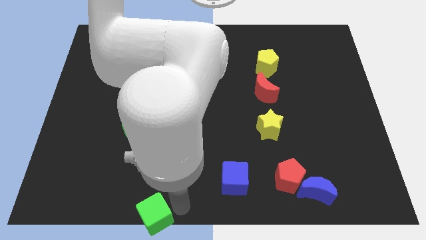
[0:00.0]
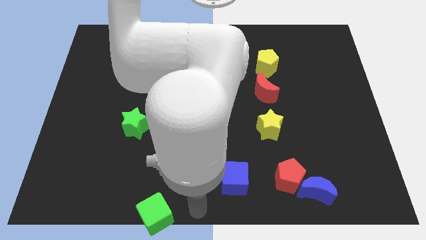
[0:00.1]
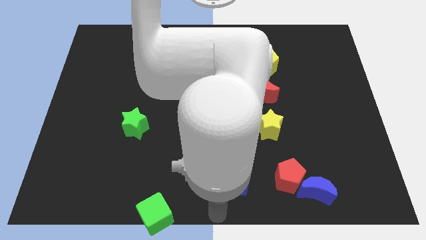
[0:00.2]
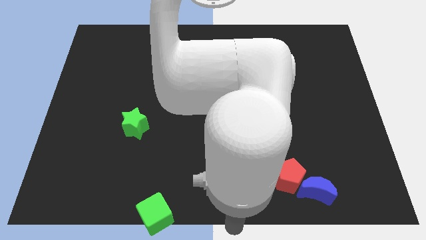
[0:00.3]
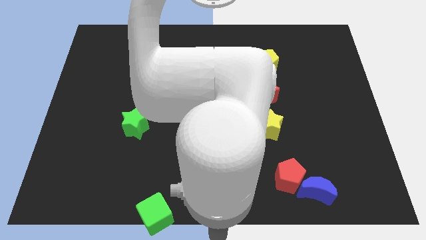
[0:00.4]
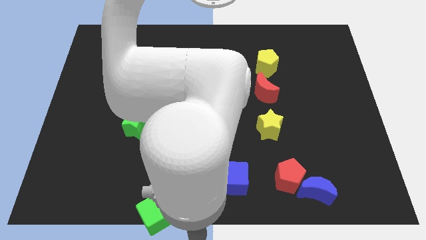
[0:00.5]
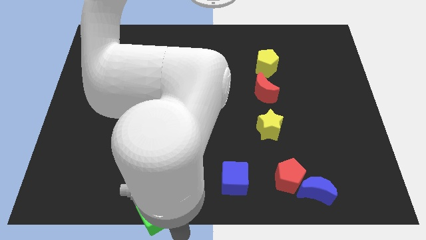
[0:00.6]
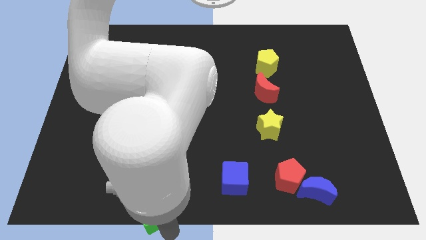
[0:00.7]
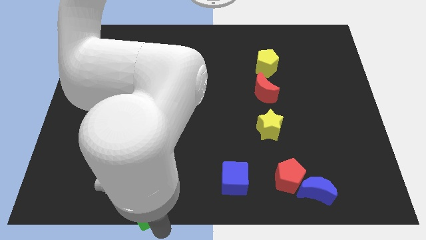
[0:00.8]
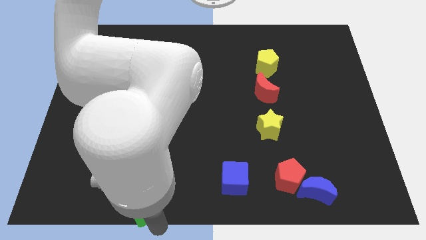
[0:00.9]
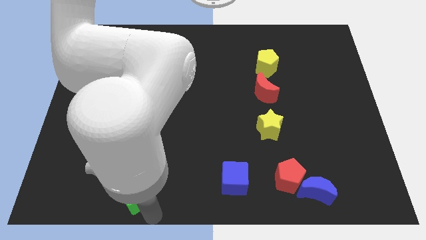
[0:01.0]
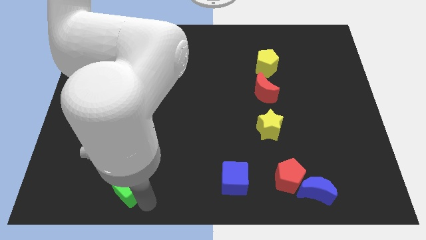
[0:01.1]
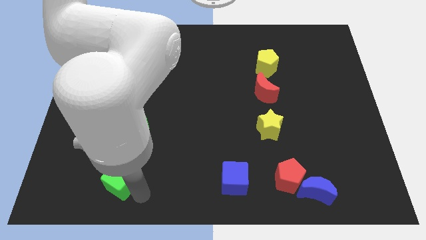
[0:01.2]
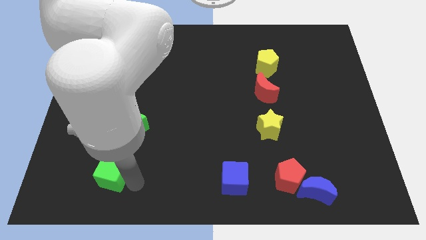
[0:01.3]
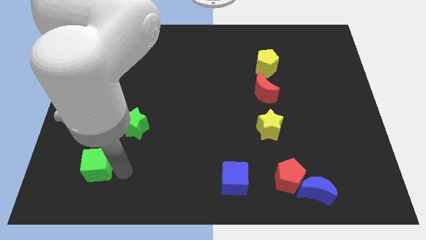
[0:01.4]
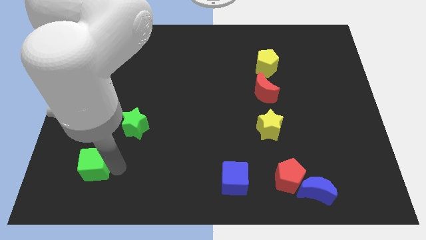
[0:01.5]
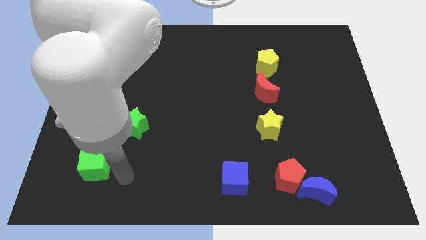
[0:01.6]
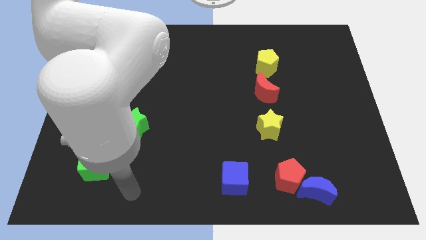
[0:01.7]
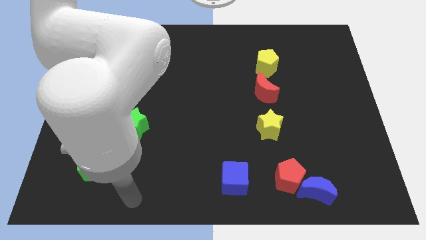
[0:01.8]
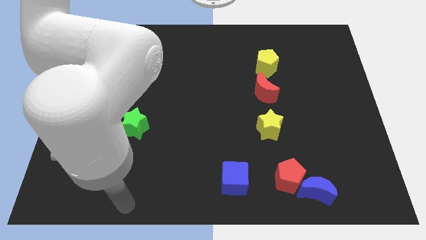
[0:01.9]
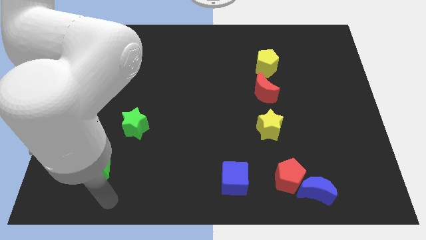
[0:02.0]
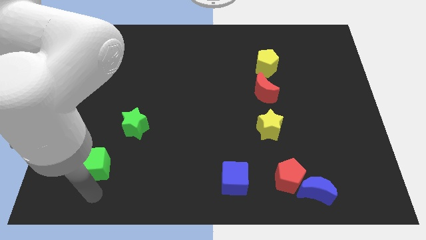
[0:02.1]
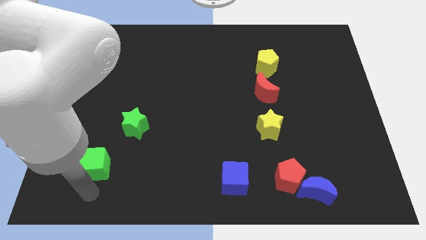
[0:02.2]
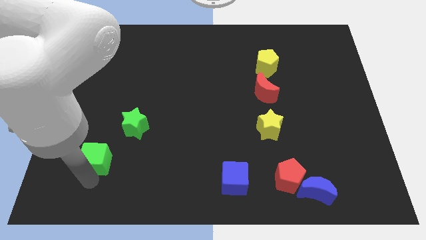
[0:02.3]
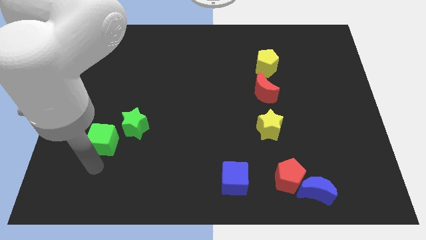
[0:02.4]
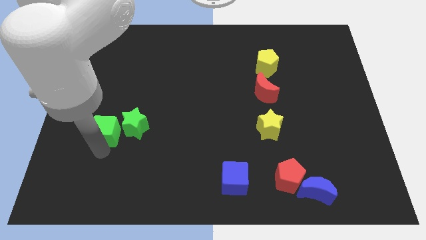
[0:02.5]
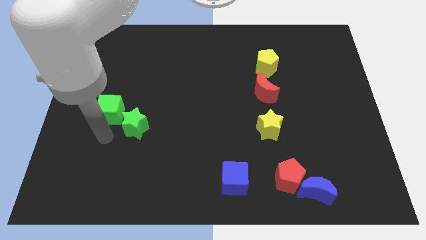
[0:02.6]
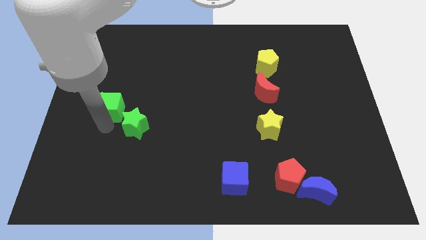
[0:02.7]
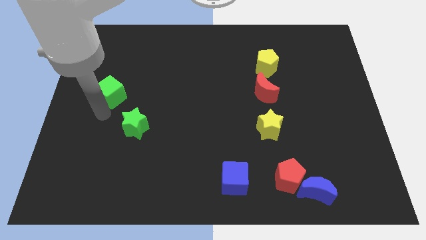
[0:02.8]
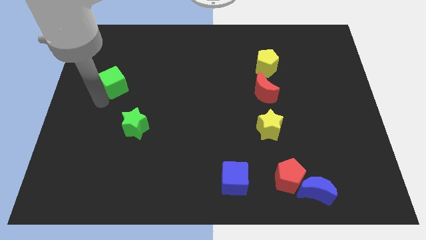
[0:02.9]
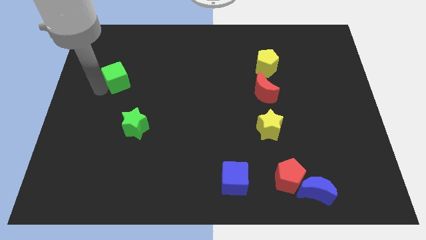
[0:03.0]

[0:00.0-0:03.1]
place the green cube left to the red moon

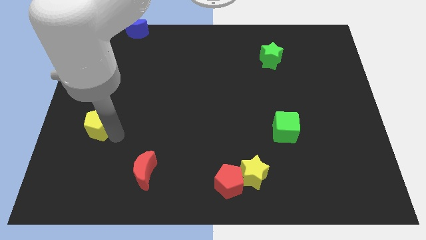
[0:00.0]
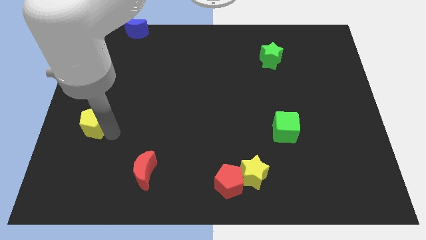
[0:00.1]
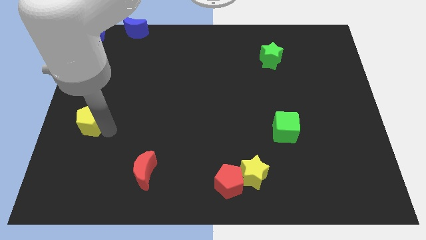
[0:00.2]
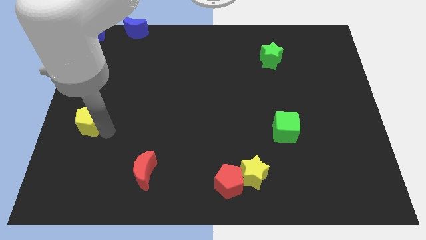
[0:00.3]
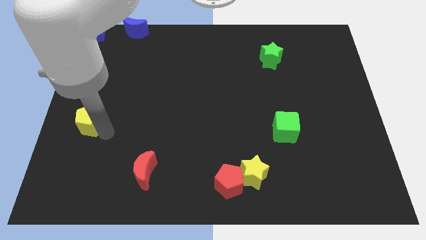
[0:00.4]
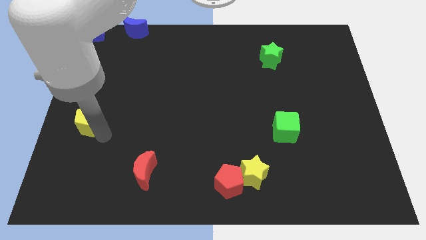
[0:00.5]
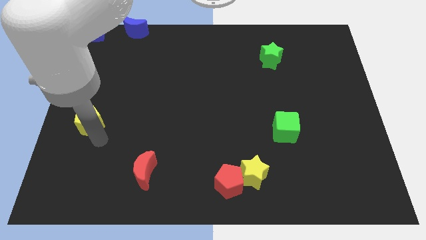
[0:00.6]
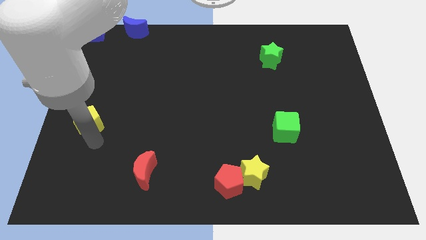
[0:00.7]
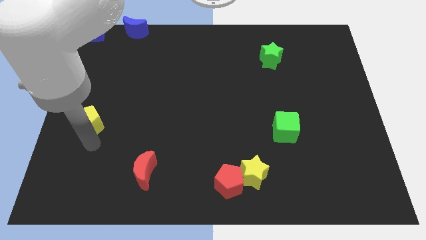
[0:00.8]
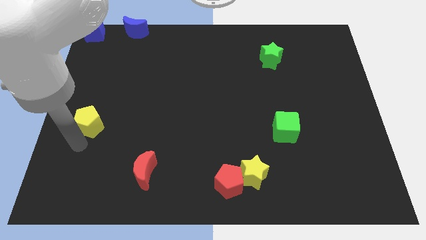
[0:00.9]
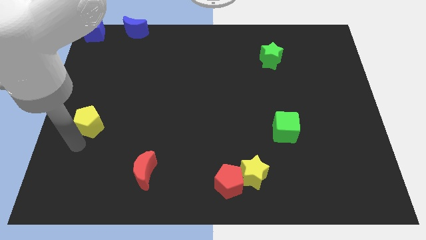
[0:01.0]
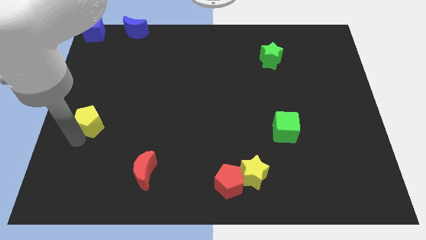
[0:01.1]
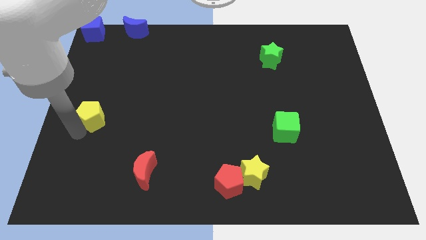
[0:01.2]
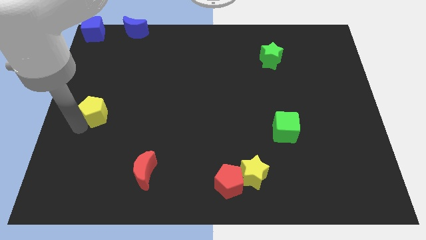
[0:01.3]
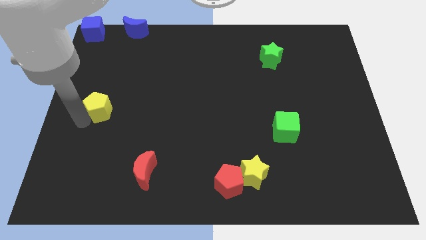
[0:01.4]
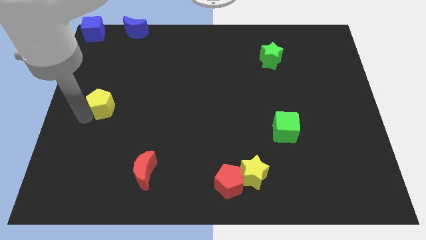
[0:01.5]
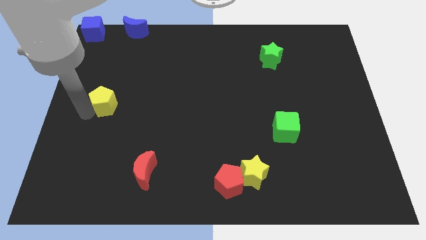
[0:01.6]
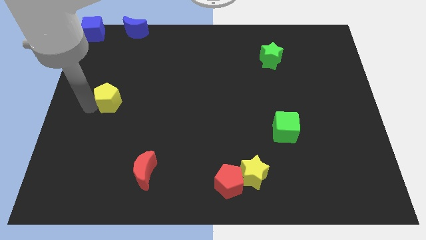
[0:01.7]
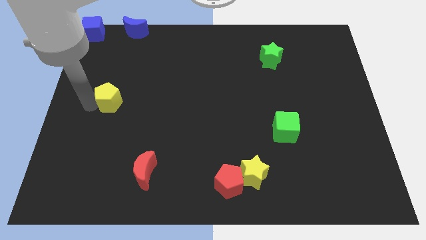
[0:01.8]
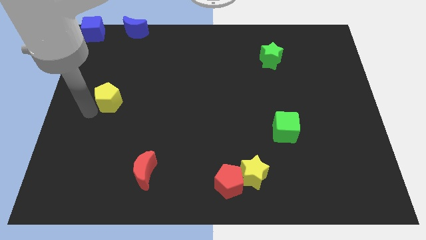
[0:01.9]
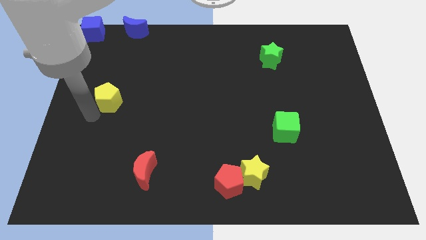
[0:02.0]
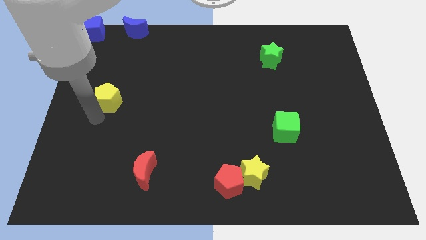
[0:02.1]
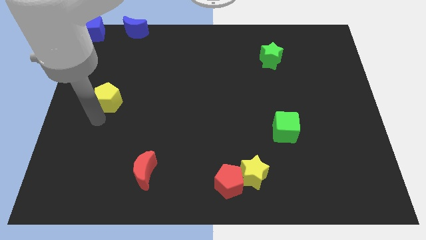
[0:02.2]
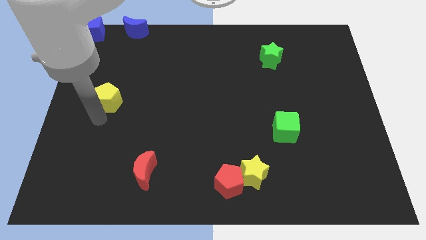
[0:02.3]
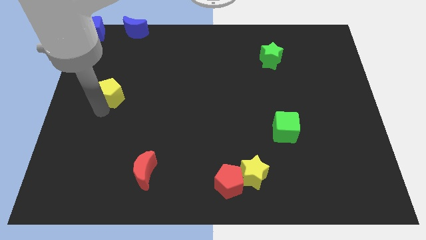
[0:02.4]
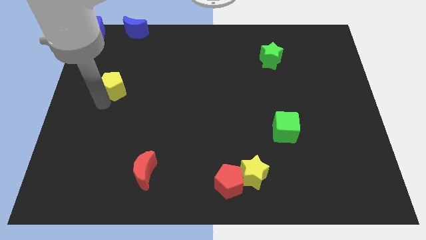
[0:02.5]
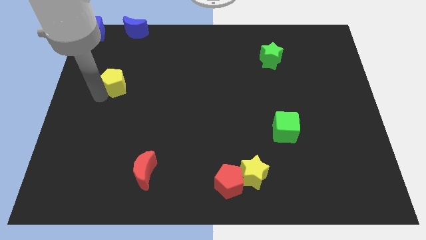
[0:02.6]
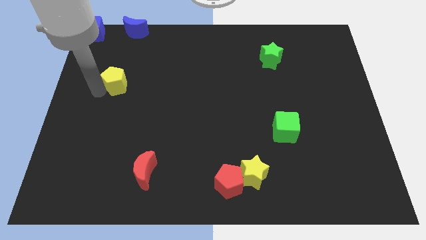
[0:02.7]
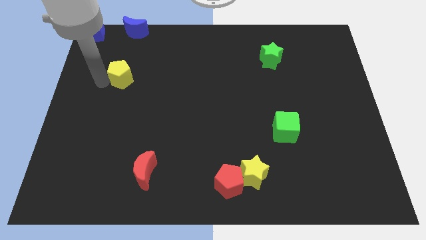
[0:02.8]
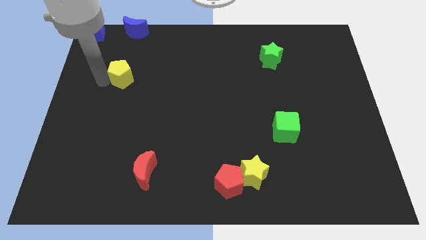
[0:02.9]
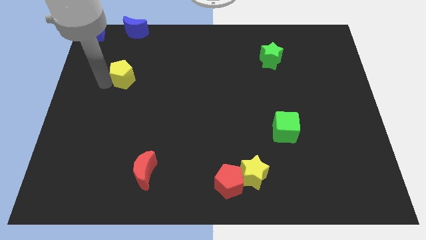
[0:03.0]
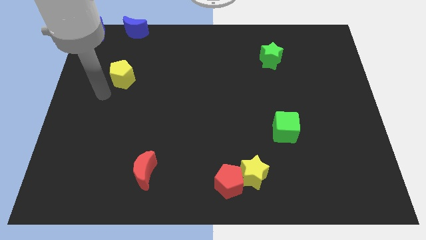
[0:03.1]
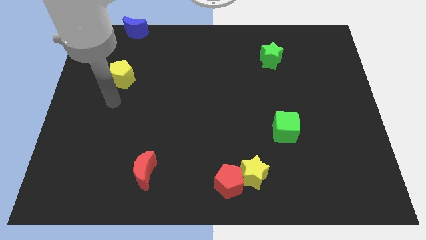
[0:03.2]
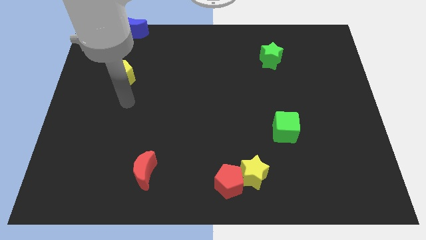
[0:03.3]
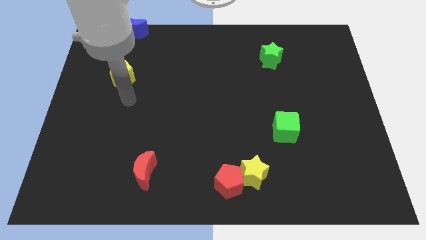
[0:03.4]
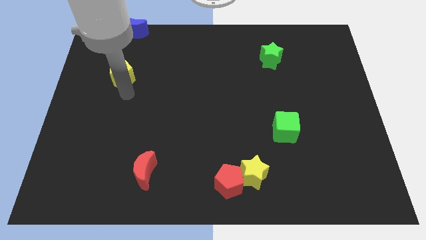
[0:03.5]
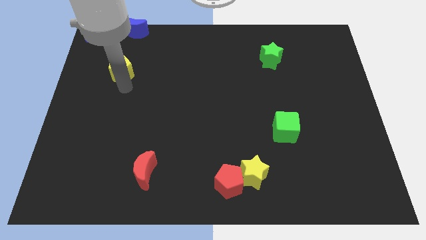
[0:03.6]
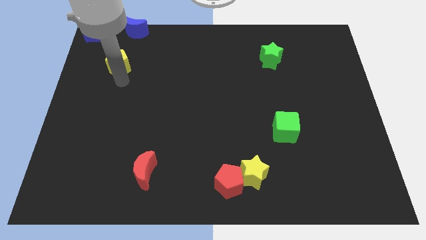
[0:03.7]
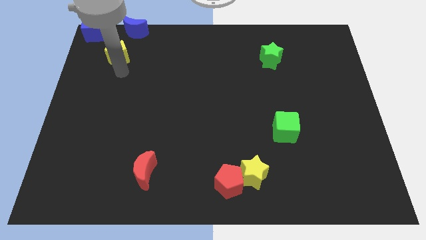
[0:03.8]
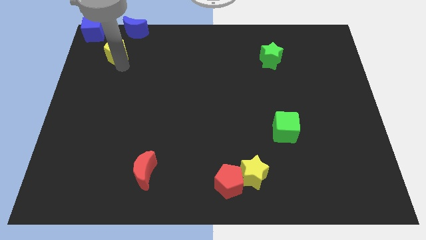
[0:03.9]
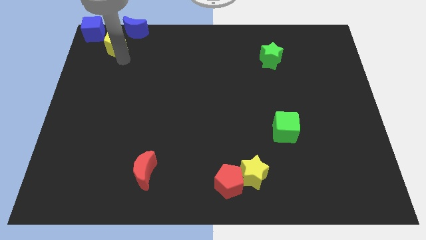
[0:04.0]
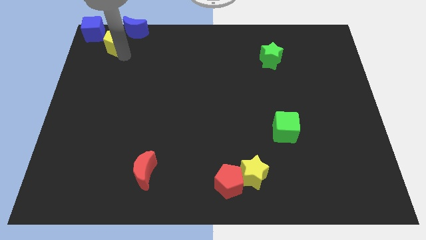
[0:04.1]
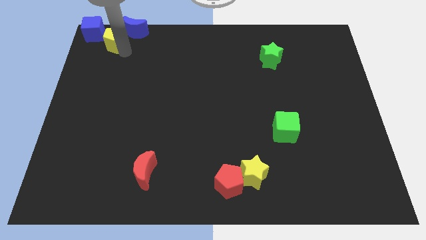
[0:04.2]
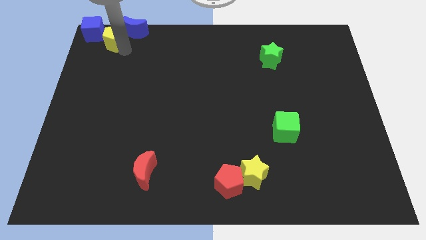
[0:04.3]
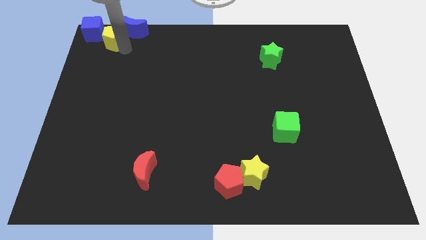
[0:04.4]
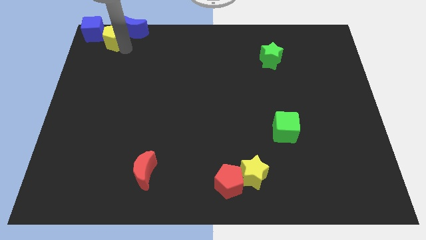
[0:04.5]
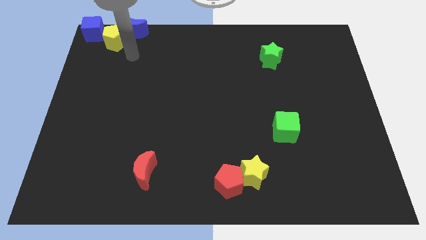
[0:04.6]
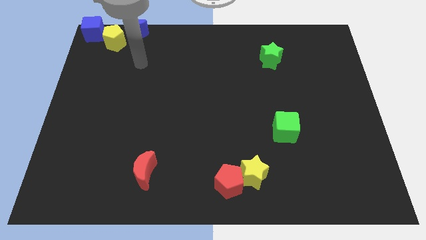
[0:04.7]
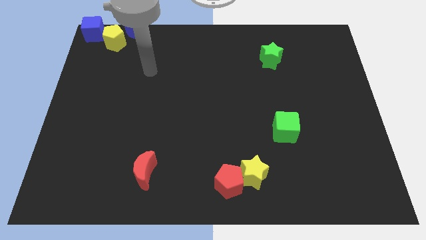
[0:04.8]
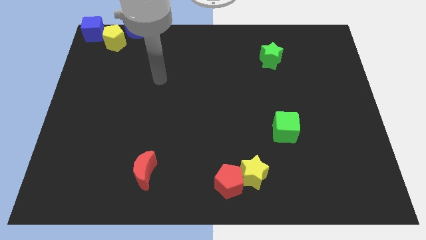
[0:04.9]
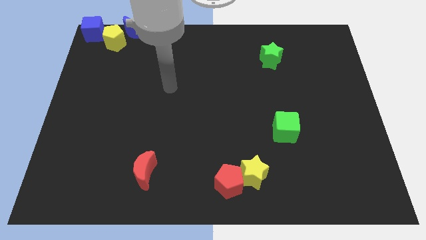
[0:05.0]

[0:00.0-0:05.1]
push the yellow pentagon close to the blue cube

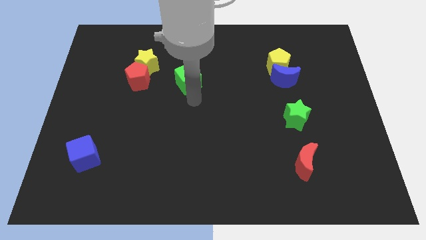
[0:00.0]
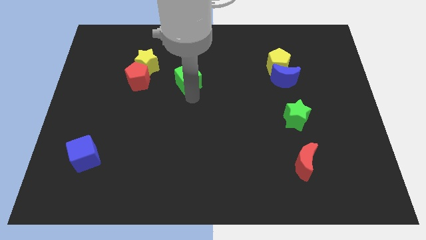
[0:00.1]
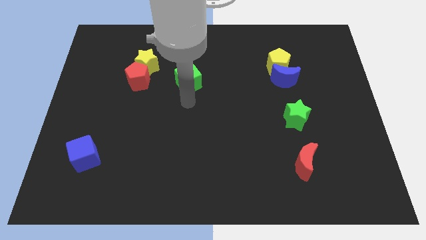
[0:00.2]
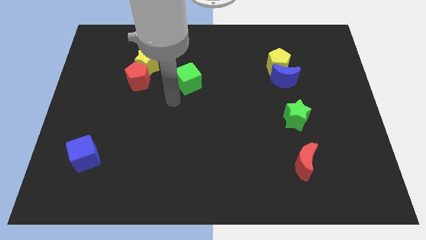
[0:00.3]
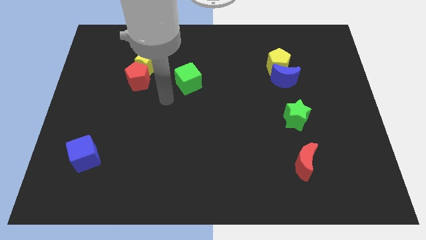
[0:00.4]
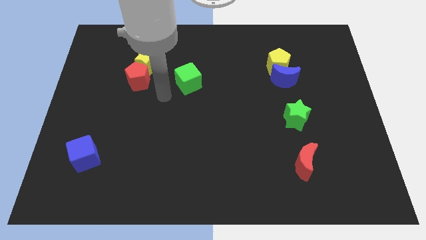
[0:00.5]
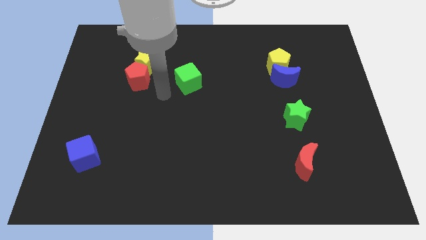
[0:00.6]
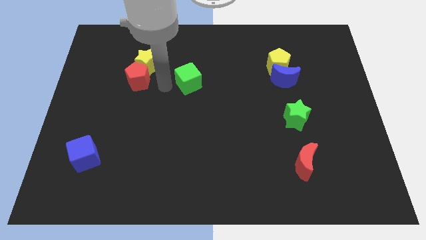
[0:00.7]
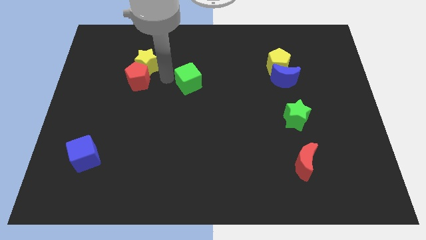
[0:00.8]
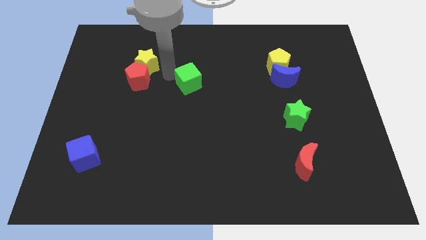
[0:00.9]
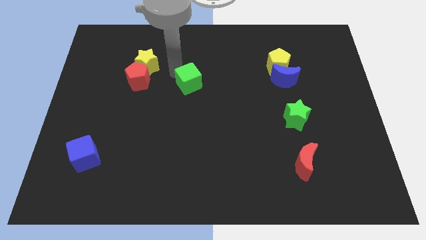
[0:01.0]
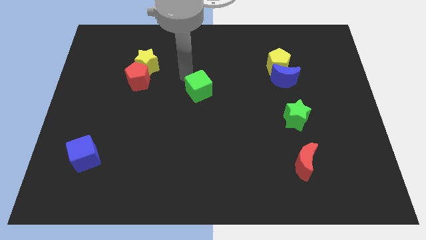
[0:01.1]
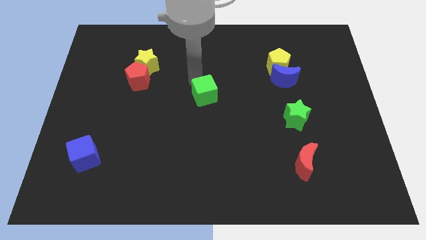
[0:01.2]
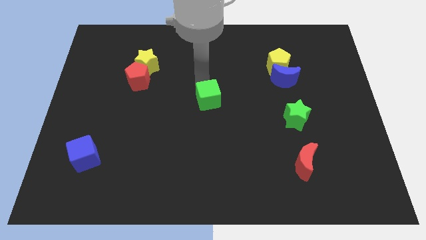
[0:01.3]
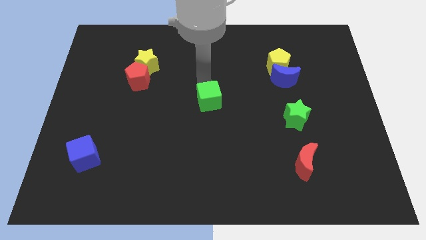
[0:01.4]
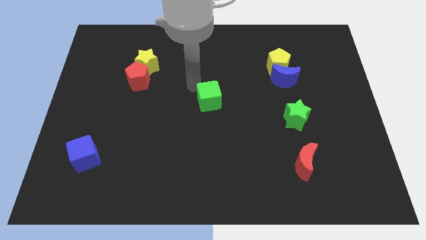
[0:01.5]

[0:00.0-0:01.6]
move the green cube to the center of the board
